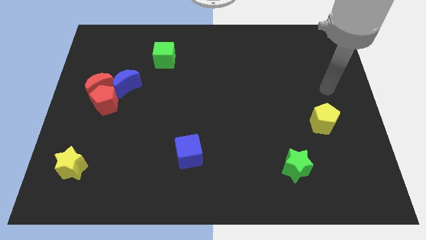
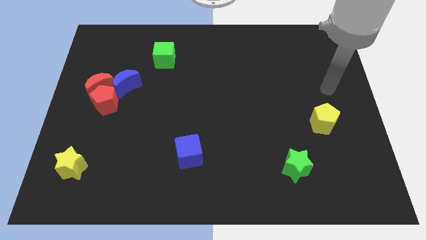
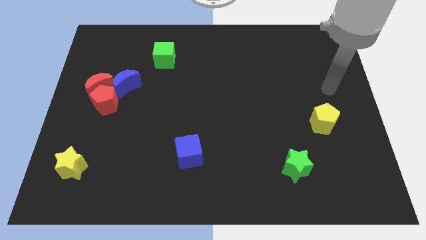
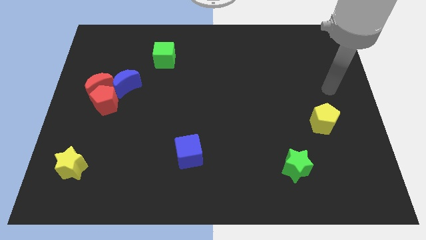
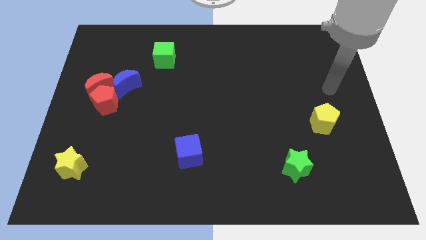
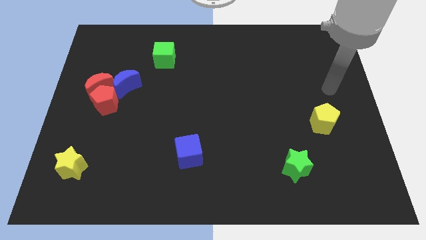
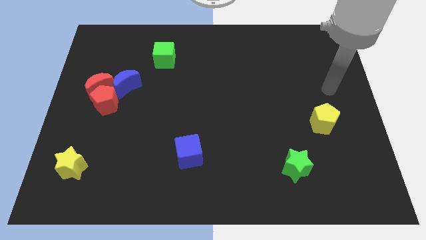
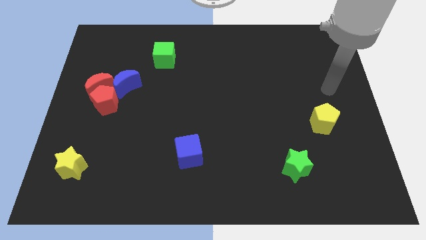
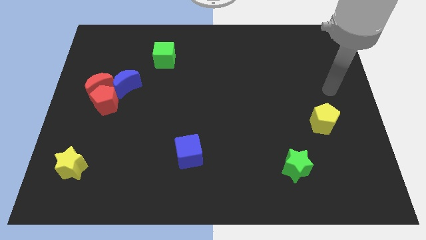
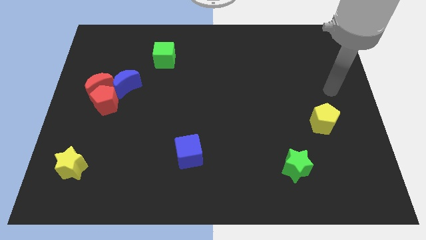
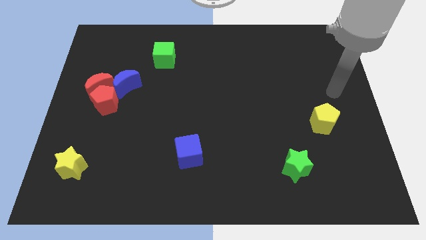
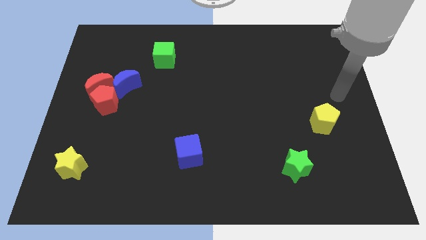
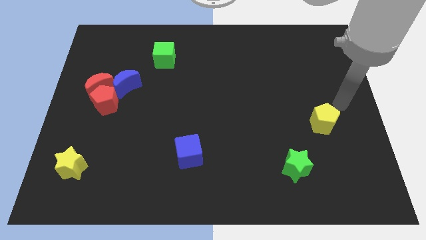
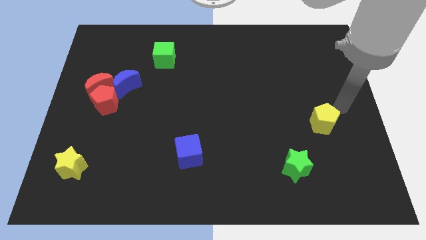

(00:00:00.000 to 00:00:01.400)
point your arm to the top of the yellow pentagon

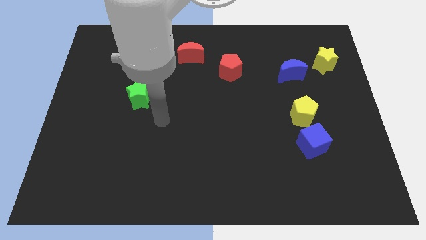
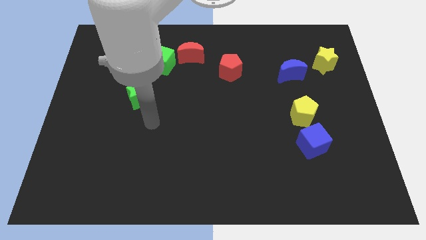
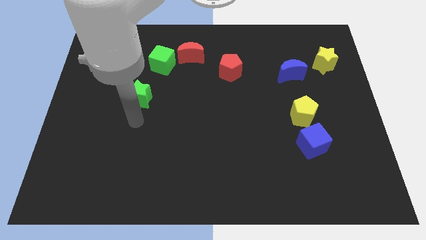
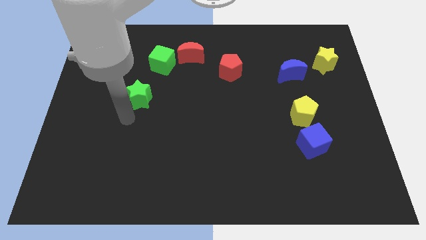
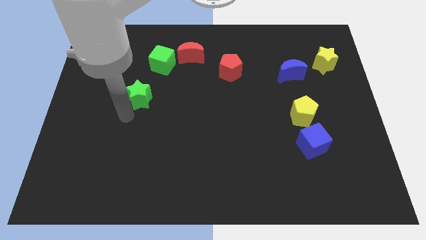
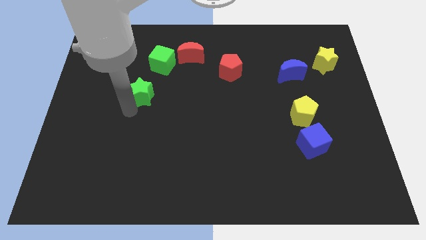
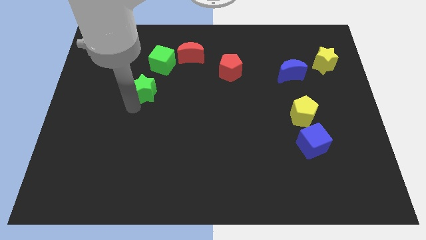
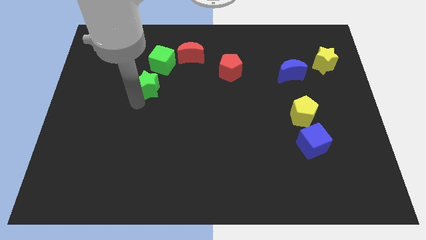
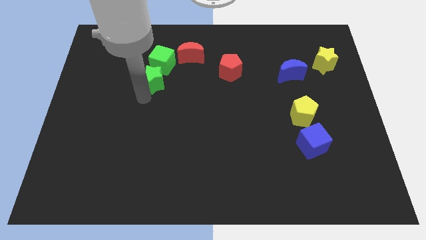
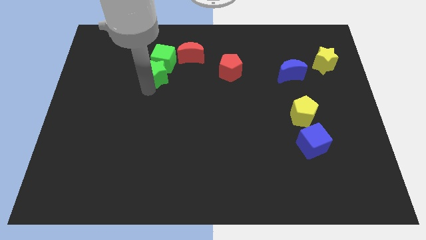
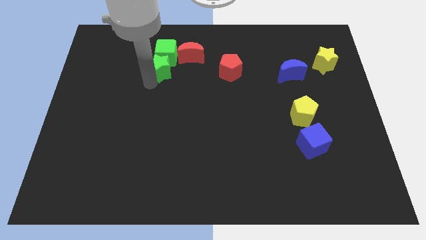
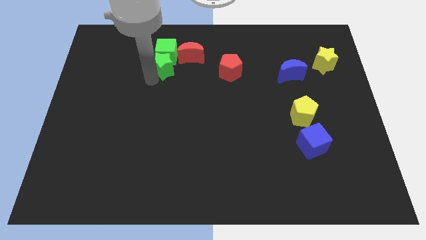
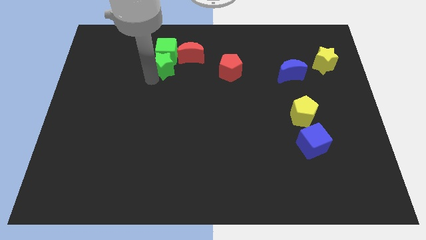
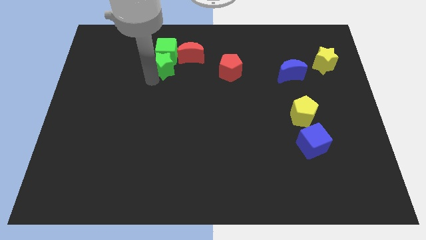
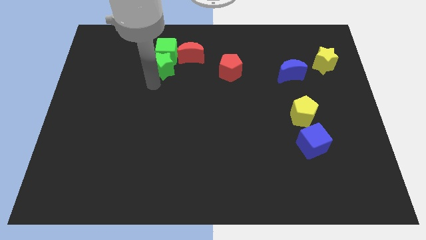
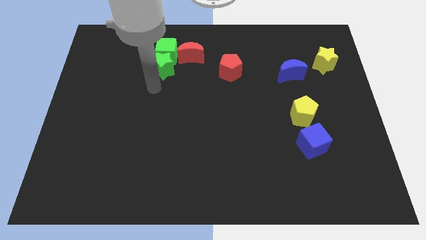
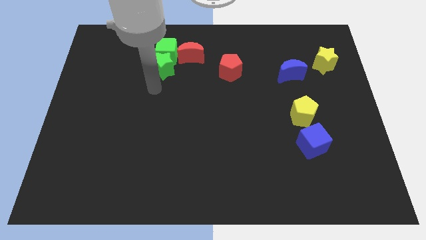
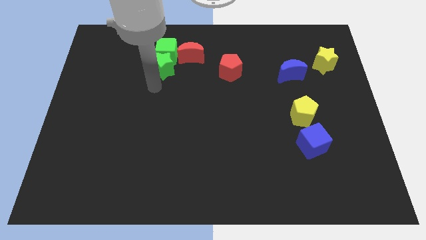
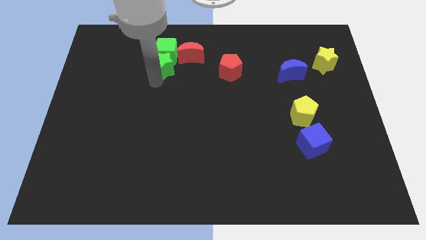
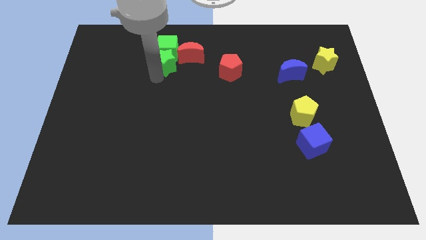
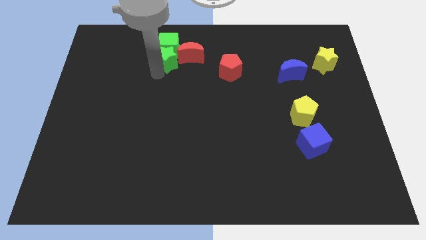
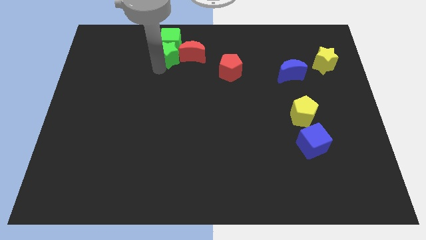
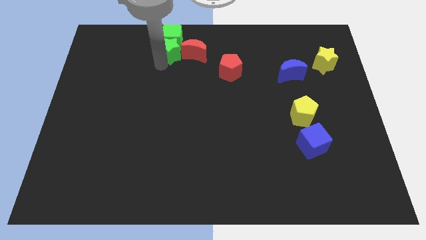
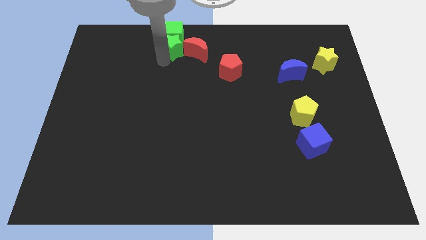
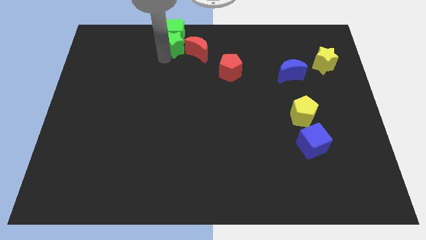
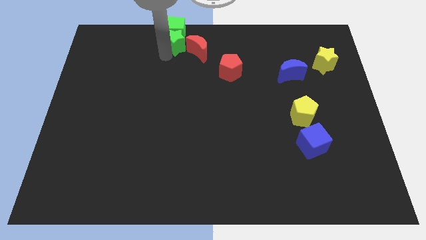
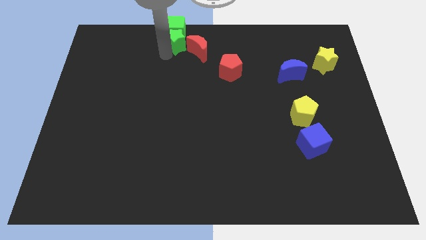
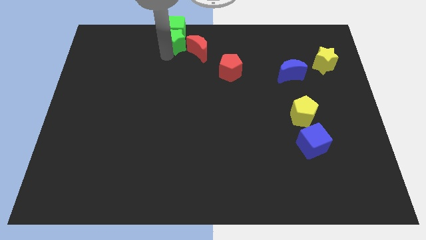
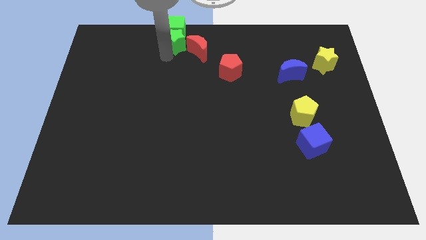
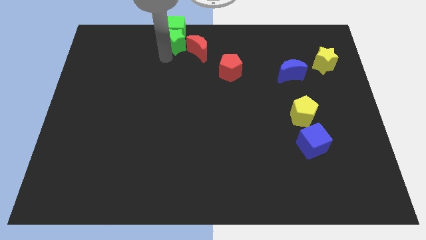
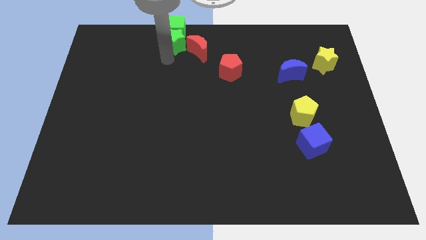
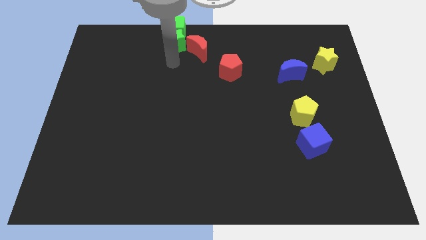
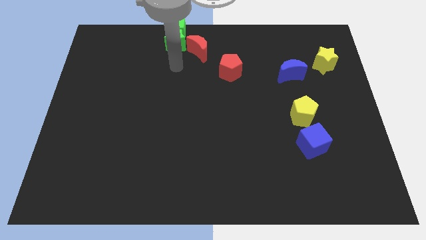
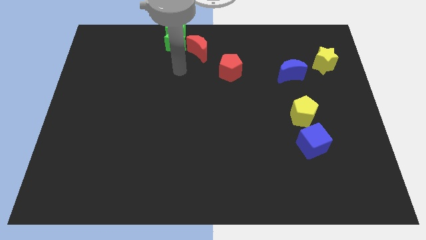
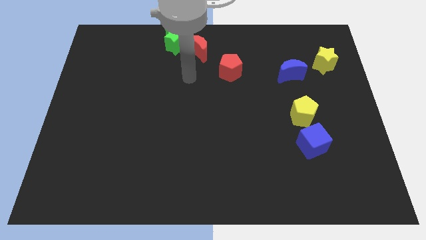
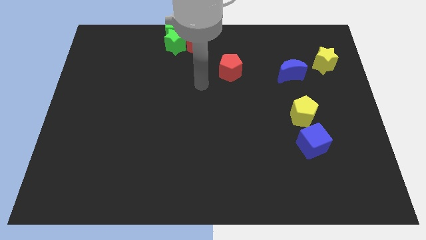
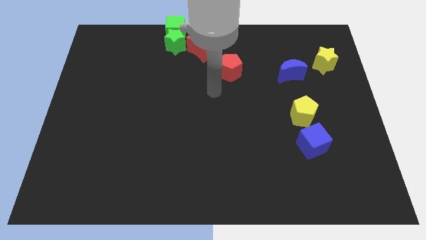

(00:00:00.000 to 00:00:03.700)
drag green blocks towards the top center

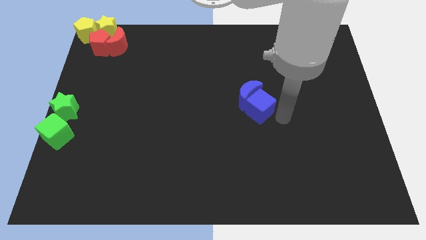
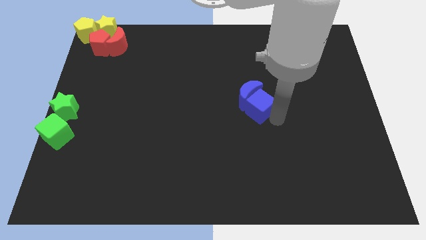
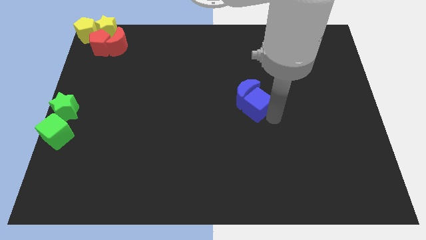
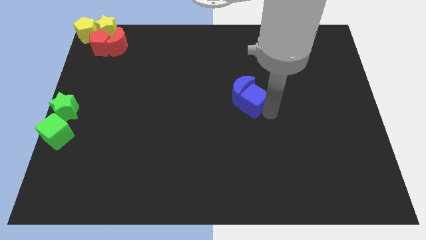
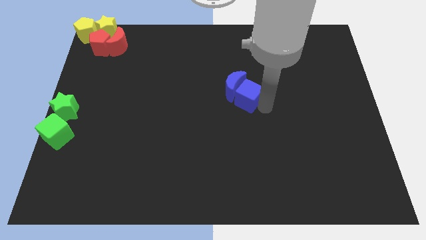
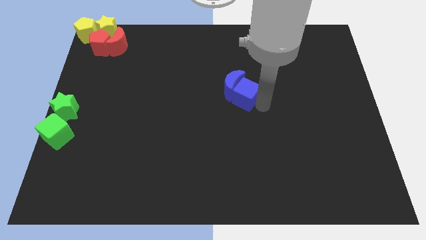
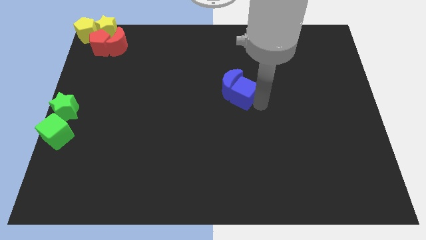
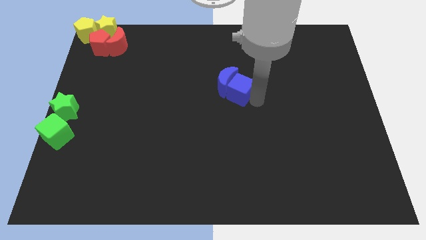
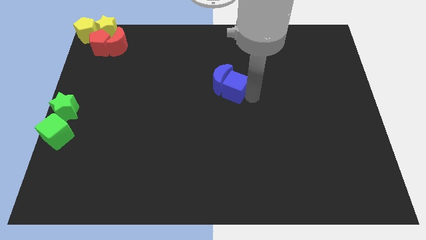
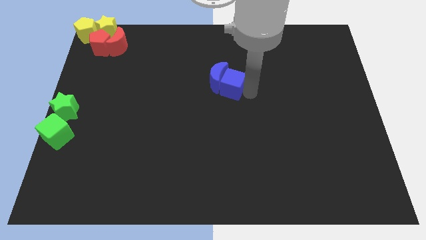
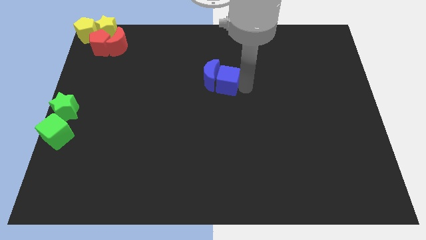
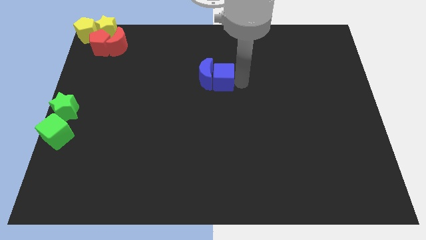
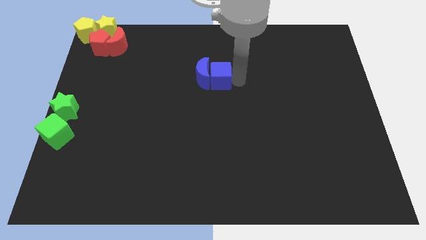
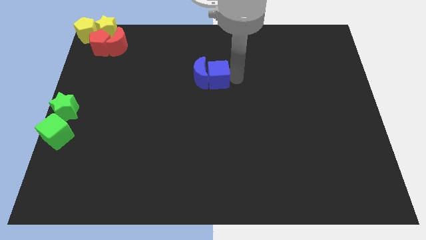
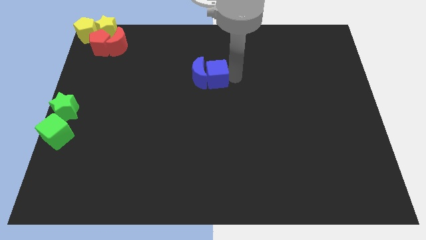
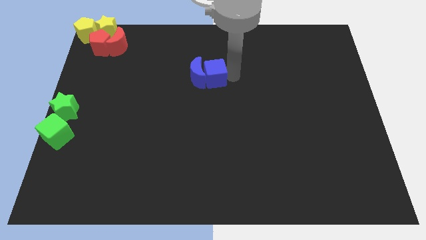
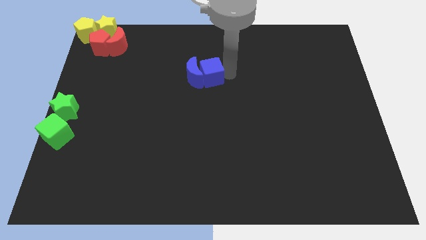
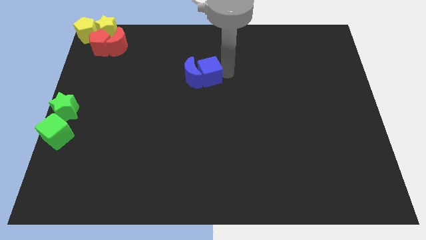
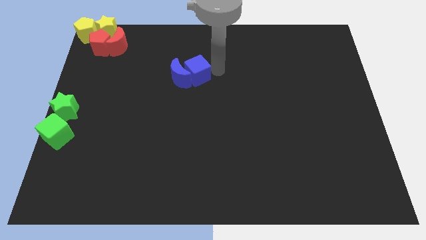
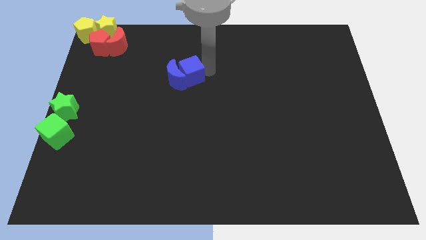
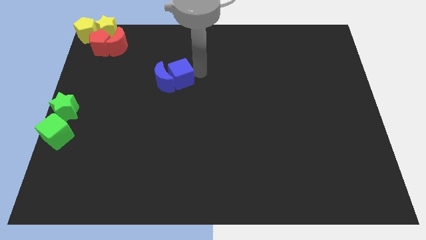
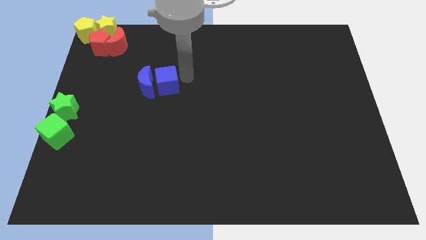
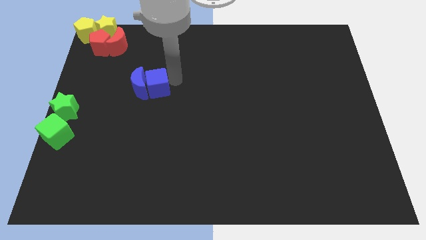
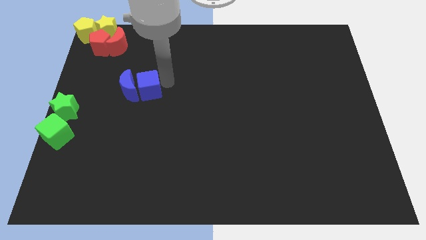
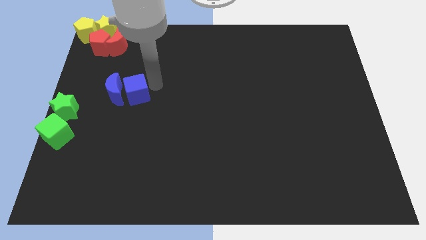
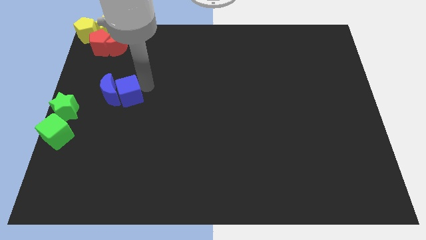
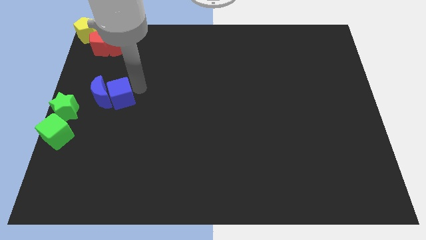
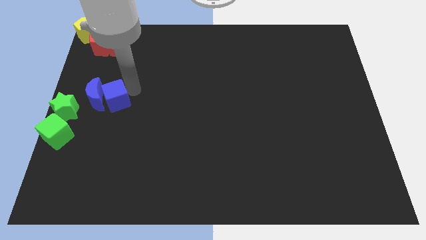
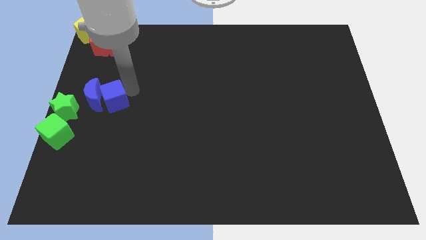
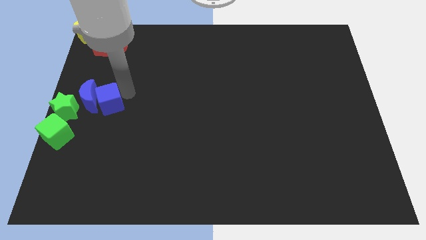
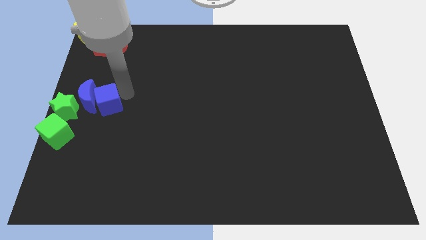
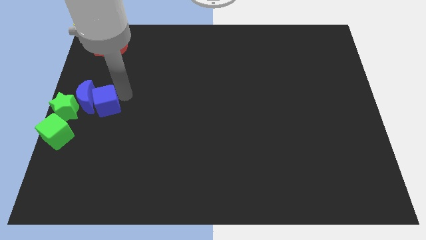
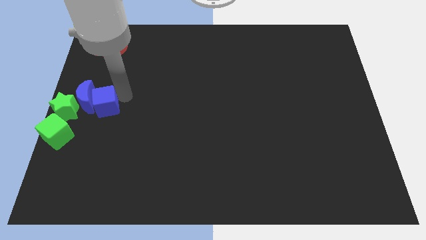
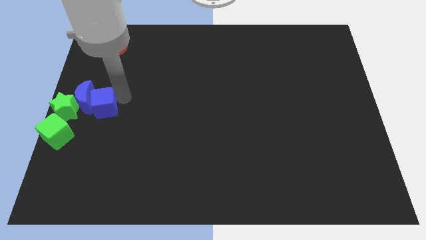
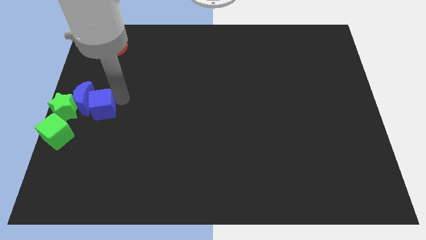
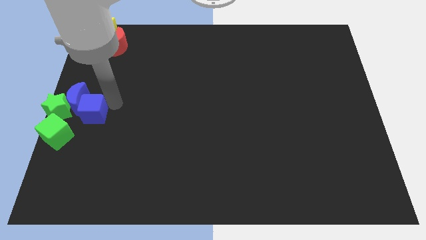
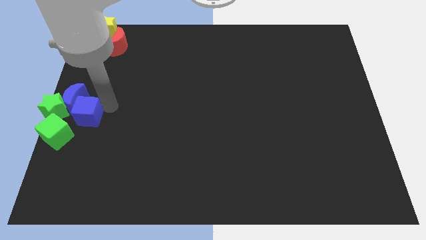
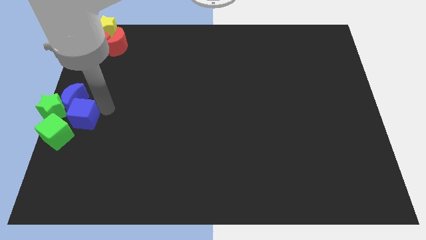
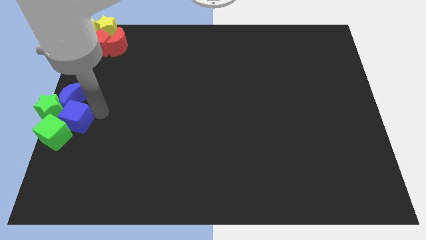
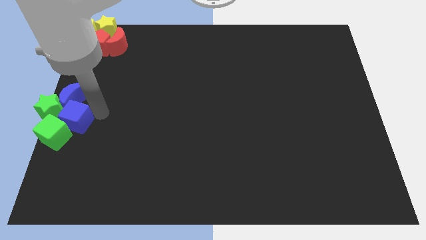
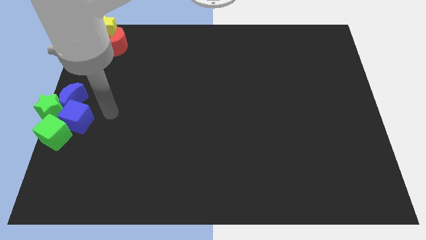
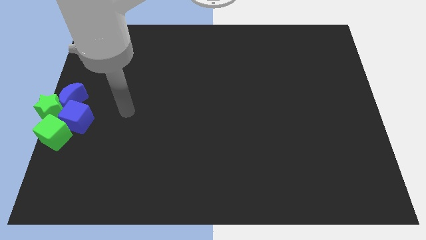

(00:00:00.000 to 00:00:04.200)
move the blue blocks into green blocks
